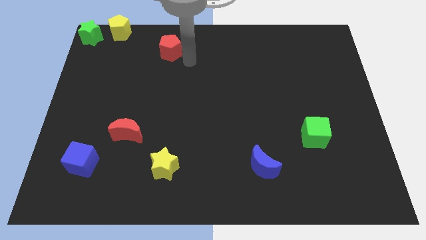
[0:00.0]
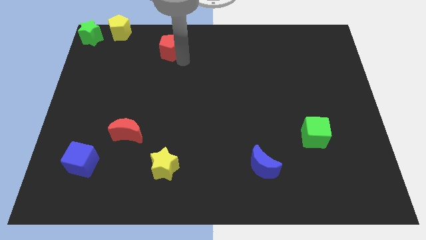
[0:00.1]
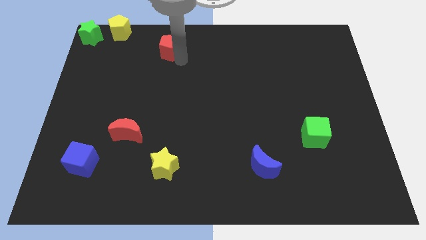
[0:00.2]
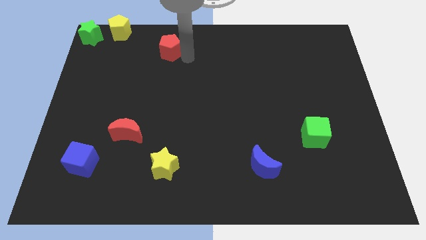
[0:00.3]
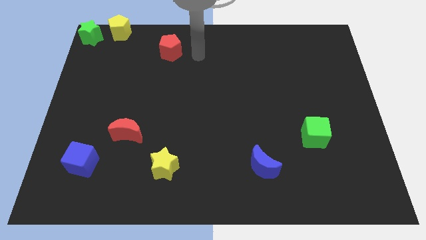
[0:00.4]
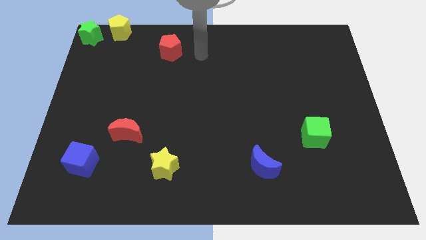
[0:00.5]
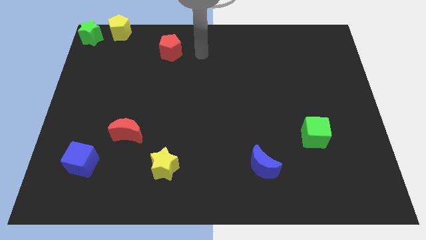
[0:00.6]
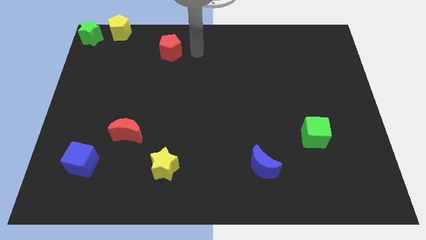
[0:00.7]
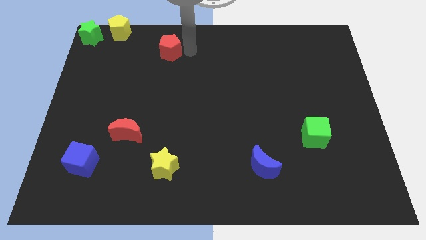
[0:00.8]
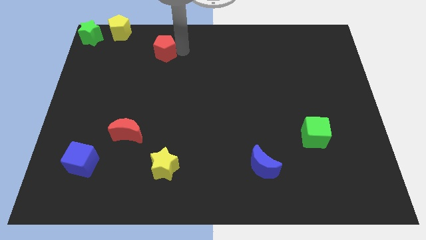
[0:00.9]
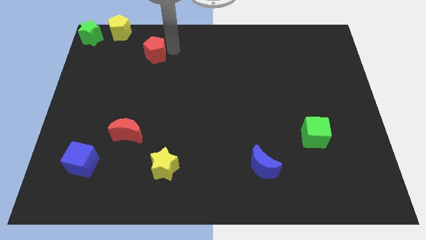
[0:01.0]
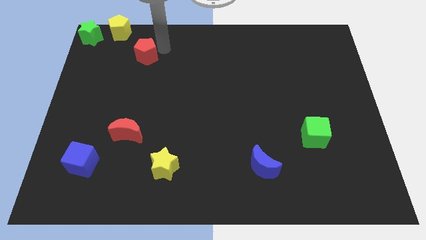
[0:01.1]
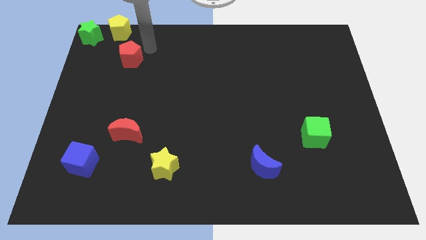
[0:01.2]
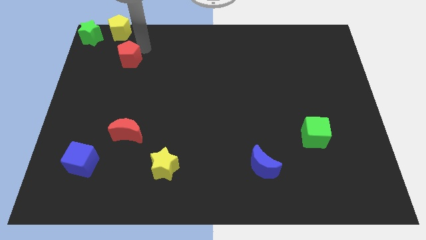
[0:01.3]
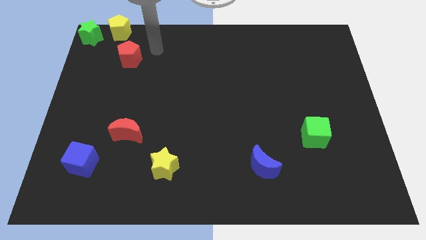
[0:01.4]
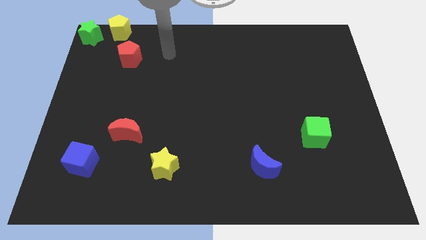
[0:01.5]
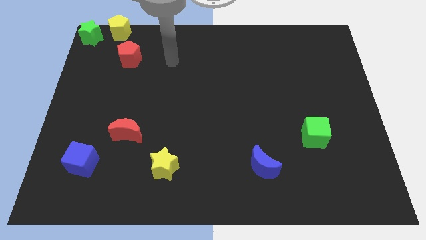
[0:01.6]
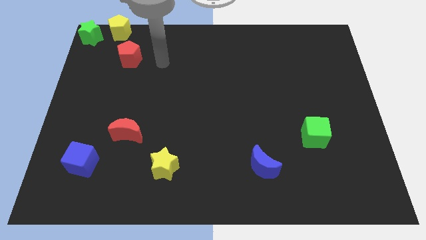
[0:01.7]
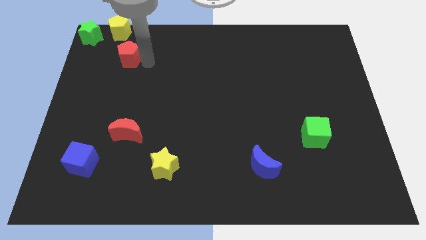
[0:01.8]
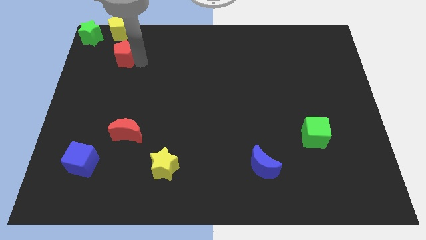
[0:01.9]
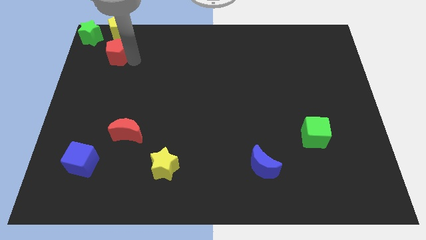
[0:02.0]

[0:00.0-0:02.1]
slide the red pentagon below the yellow pentagon

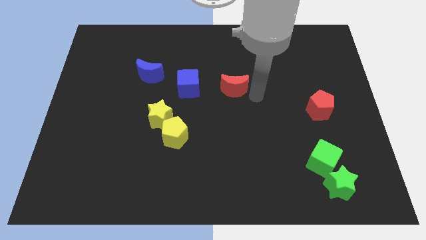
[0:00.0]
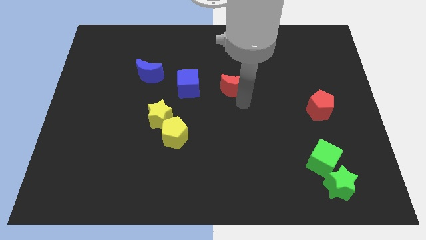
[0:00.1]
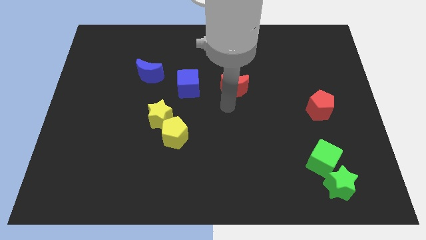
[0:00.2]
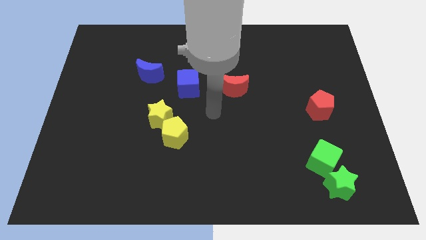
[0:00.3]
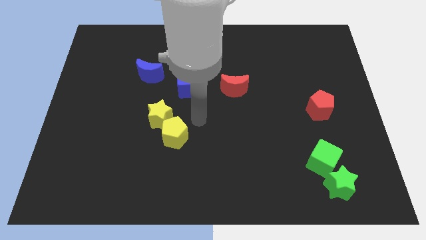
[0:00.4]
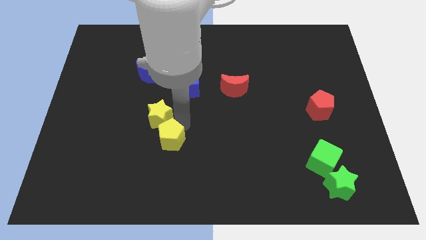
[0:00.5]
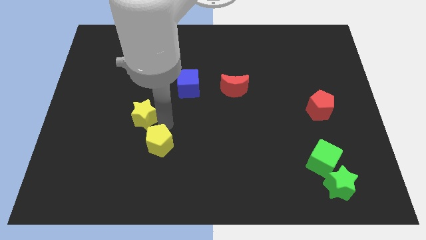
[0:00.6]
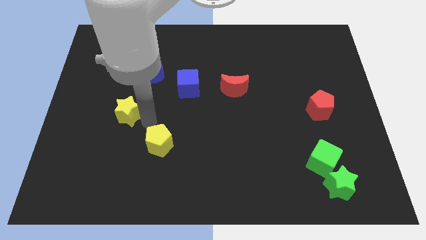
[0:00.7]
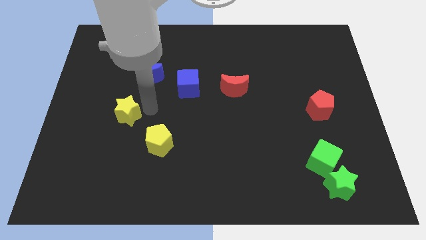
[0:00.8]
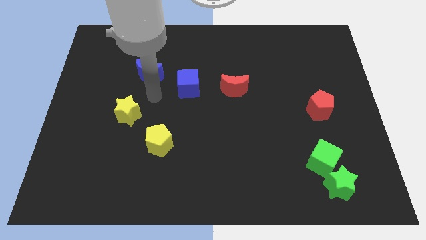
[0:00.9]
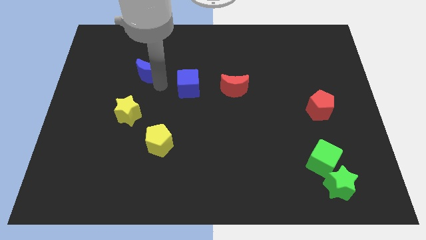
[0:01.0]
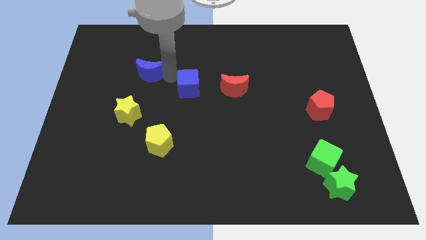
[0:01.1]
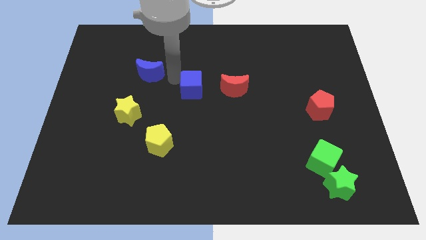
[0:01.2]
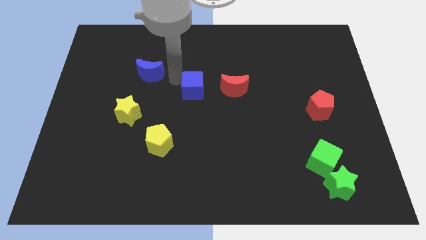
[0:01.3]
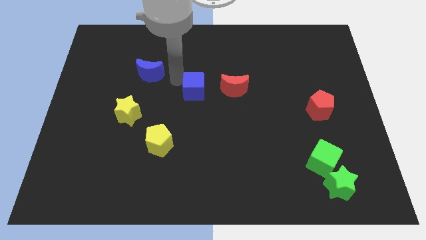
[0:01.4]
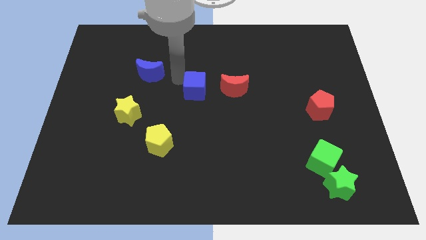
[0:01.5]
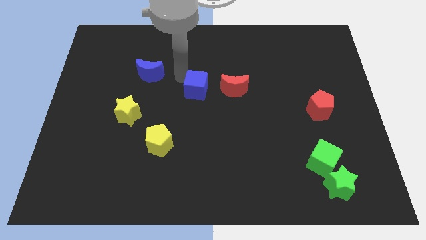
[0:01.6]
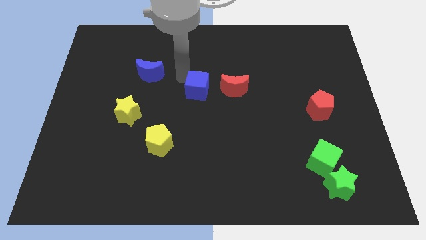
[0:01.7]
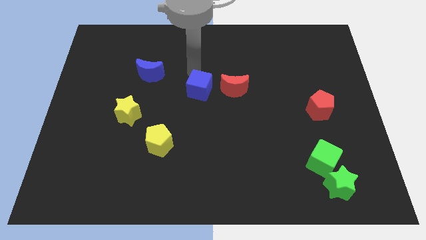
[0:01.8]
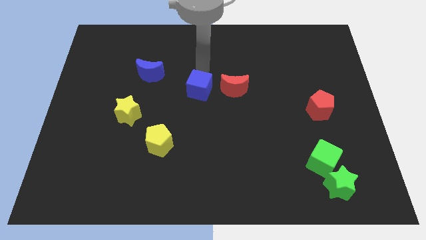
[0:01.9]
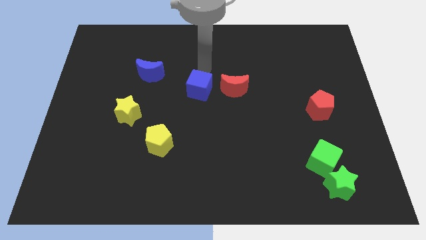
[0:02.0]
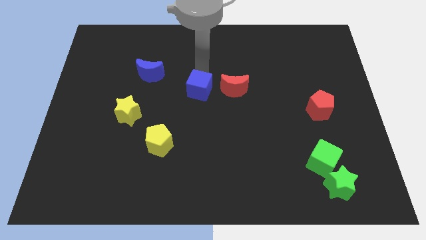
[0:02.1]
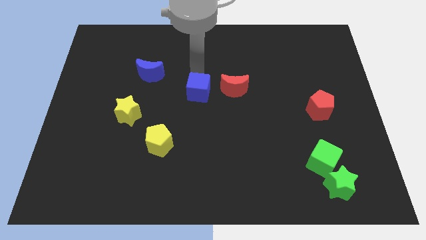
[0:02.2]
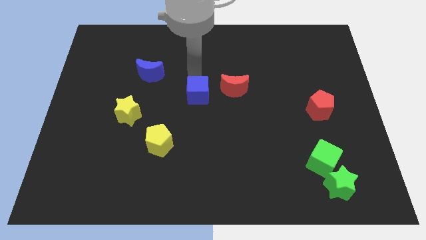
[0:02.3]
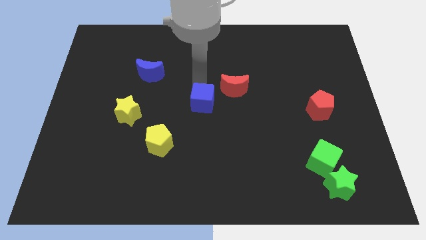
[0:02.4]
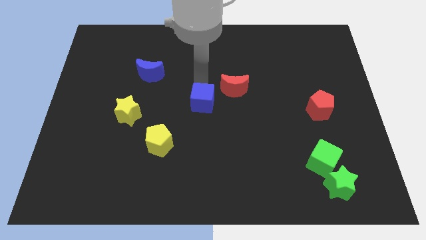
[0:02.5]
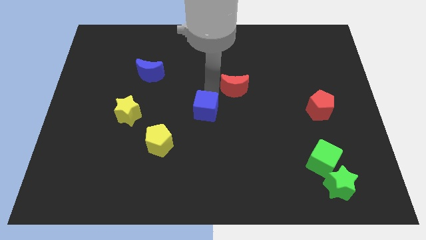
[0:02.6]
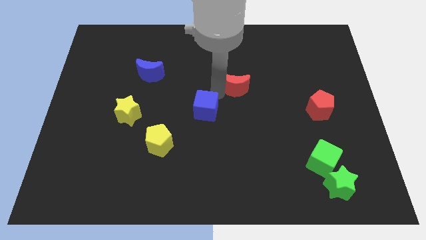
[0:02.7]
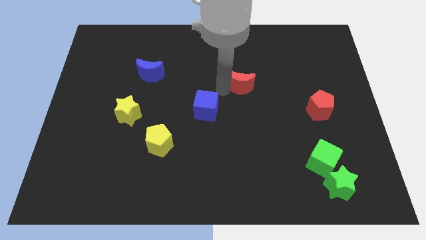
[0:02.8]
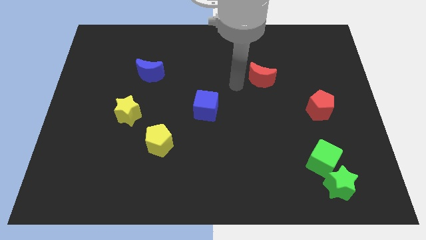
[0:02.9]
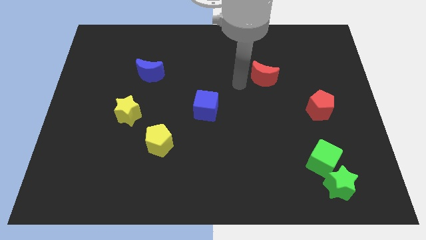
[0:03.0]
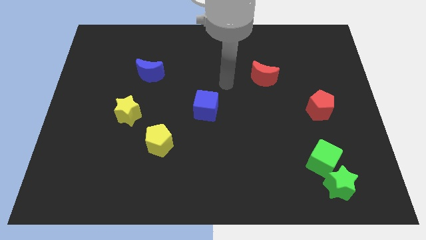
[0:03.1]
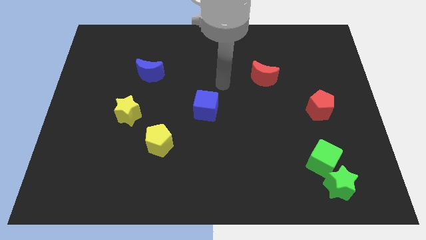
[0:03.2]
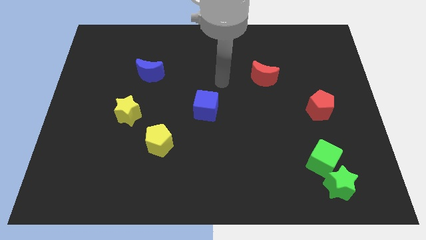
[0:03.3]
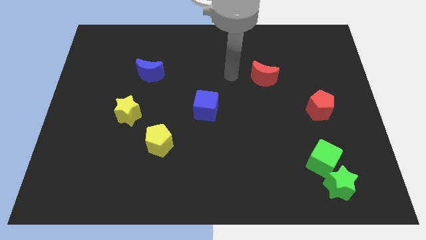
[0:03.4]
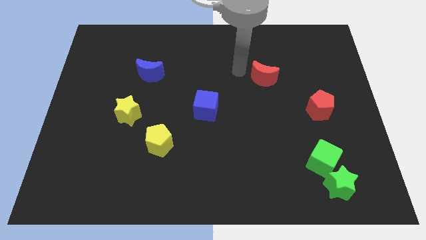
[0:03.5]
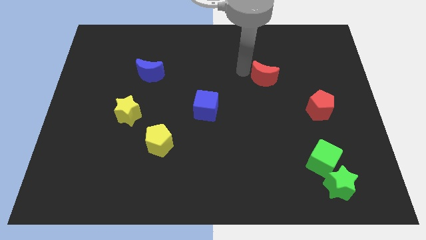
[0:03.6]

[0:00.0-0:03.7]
move the blue cube to the center of the board

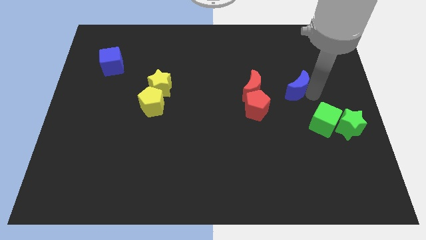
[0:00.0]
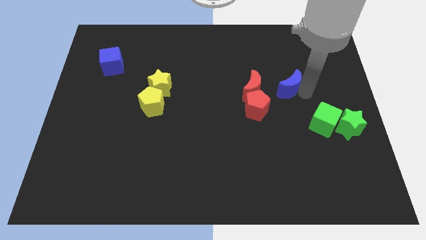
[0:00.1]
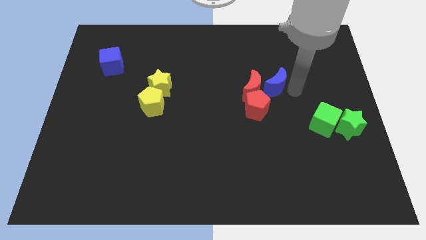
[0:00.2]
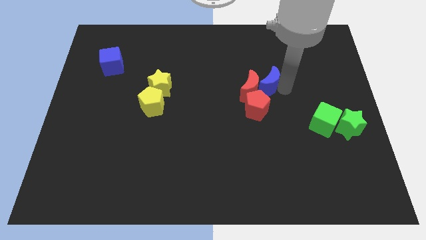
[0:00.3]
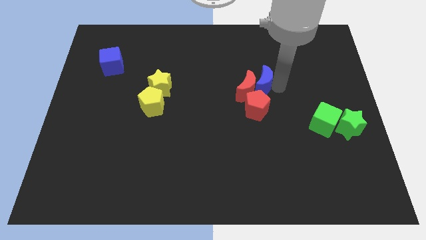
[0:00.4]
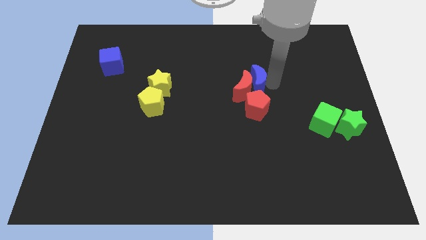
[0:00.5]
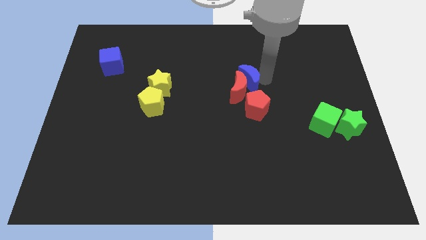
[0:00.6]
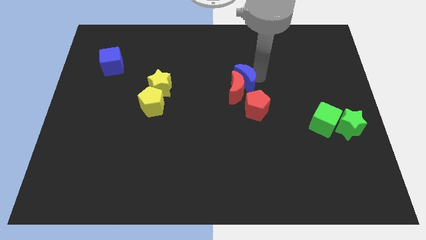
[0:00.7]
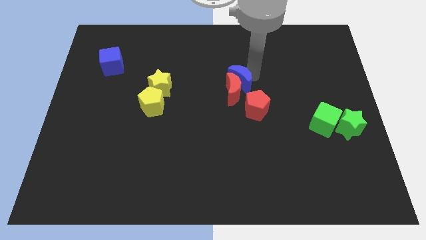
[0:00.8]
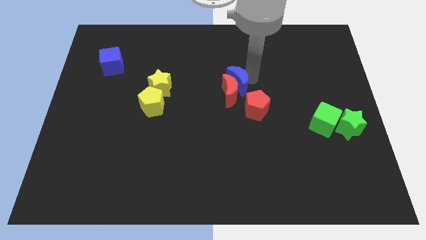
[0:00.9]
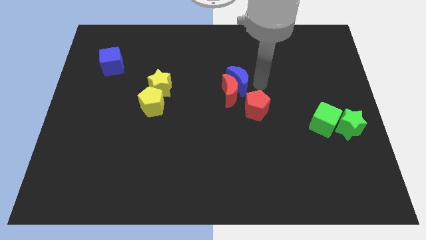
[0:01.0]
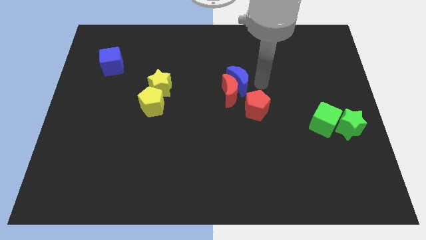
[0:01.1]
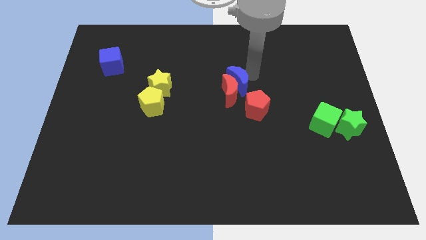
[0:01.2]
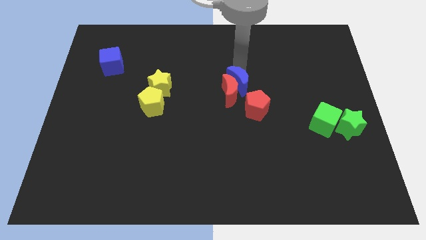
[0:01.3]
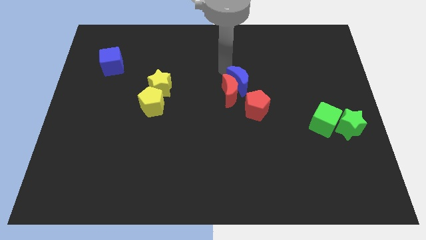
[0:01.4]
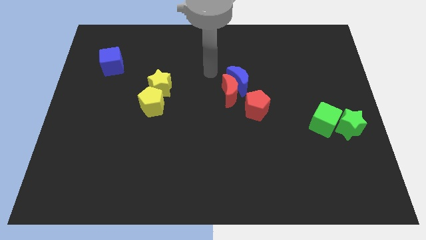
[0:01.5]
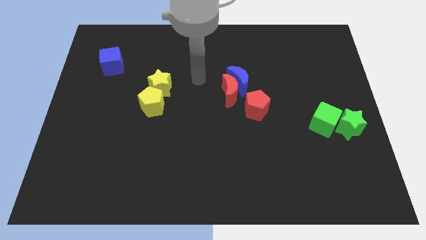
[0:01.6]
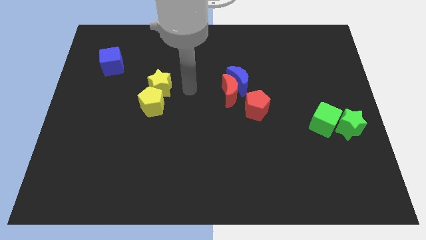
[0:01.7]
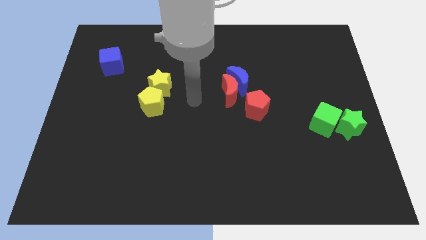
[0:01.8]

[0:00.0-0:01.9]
move the blue moon into the red moon

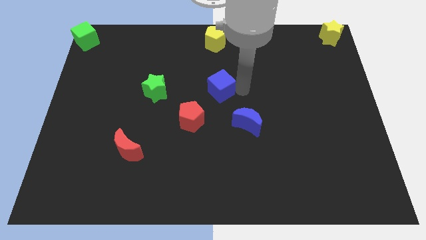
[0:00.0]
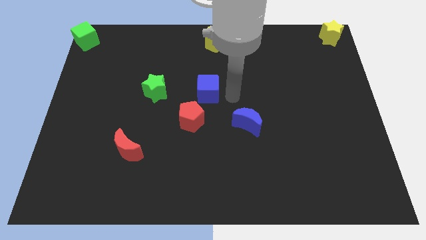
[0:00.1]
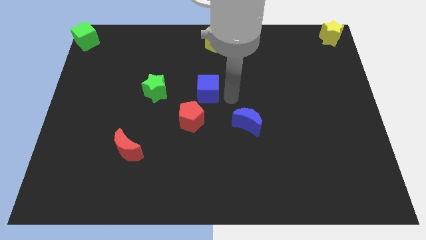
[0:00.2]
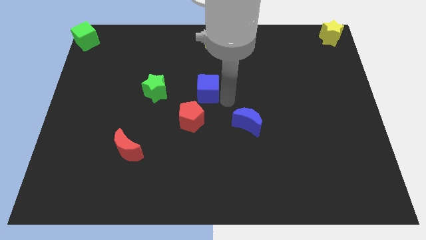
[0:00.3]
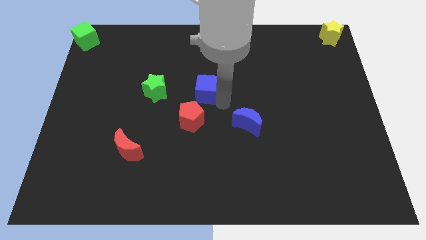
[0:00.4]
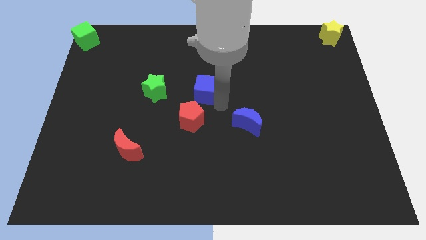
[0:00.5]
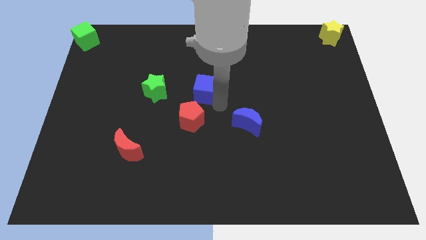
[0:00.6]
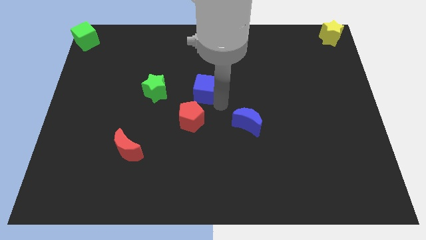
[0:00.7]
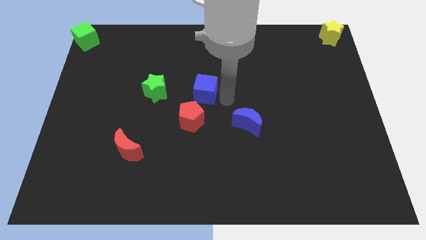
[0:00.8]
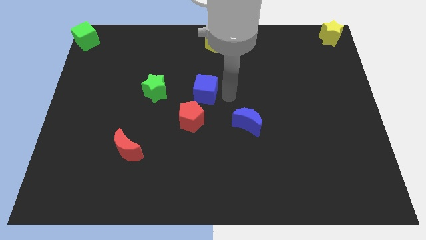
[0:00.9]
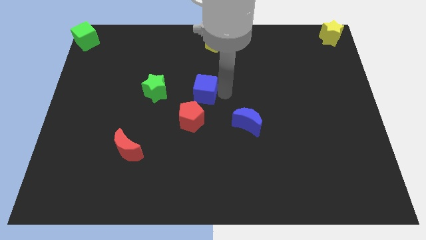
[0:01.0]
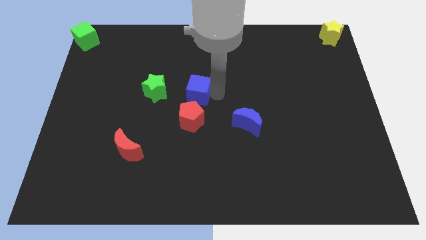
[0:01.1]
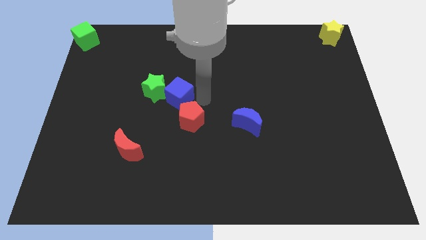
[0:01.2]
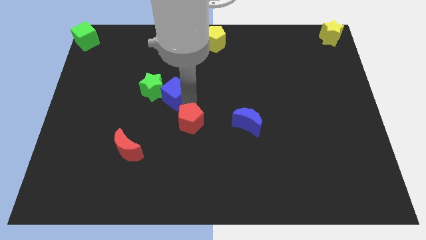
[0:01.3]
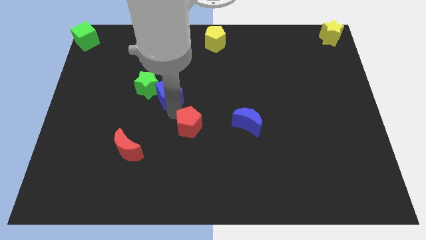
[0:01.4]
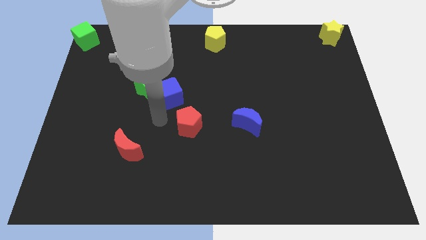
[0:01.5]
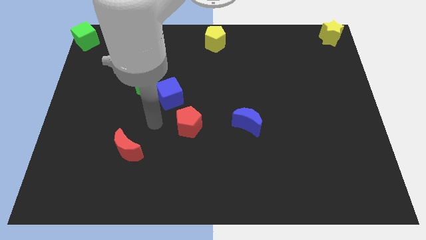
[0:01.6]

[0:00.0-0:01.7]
push the blue cube into the green star
